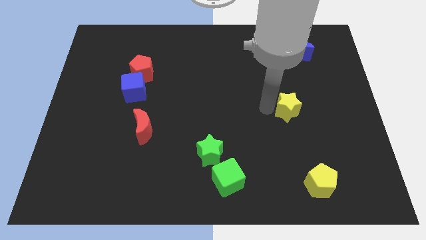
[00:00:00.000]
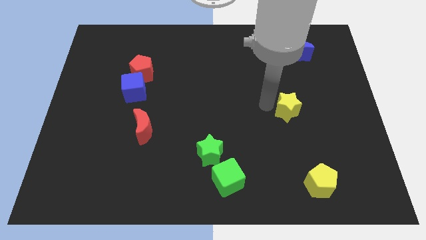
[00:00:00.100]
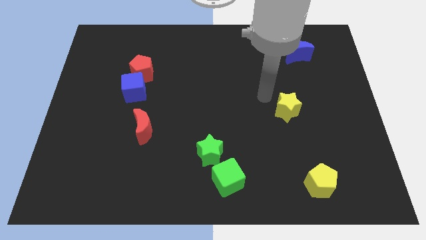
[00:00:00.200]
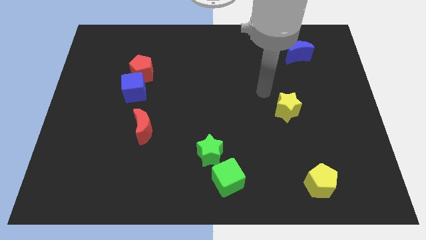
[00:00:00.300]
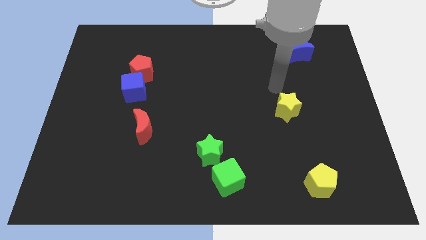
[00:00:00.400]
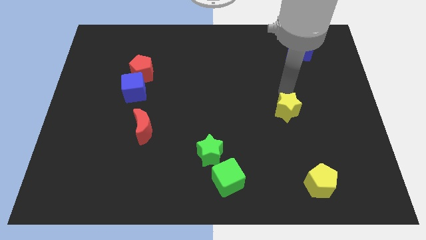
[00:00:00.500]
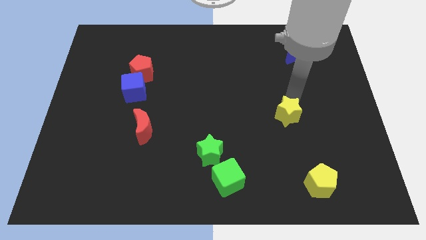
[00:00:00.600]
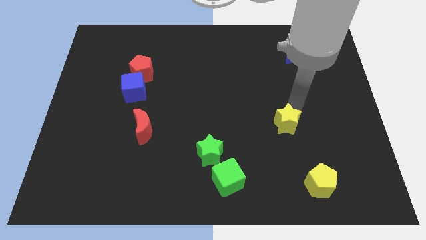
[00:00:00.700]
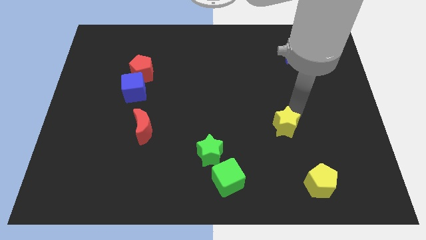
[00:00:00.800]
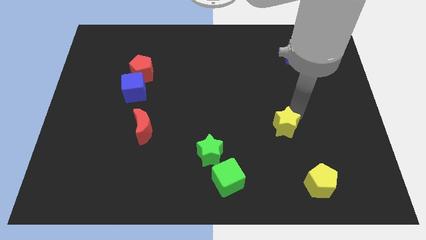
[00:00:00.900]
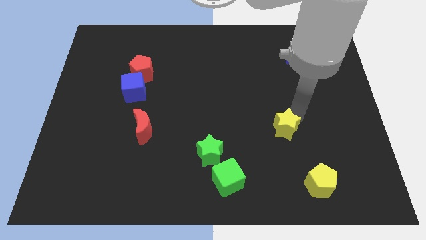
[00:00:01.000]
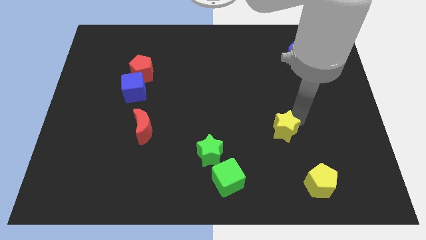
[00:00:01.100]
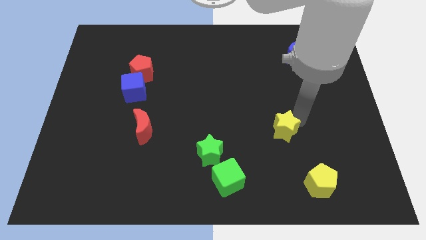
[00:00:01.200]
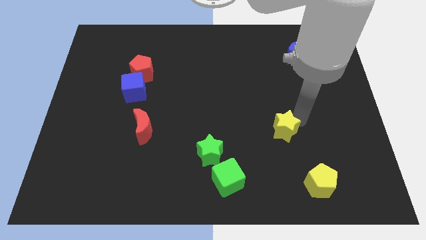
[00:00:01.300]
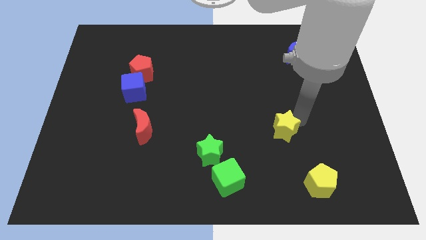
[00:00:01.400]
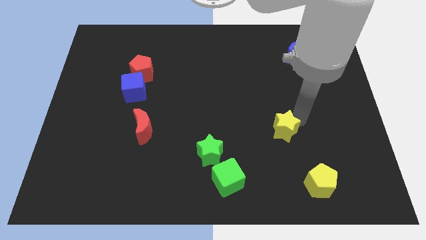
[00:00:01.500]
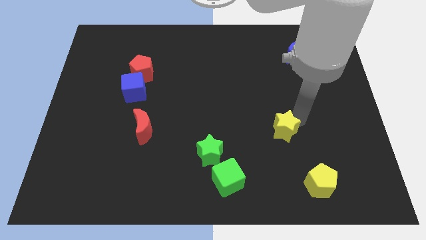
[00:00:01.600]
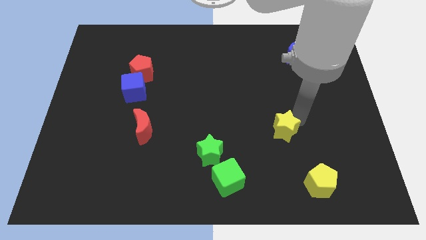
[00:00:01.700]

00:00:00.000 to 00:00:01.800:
move the yellow star towards down

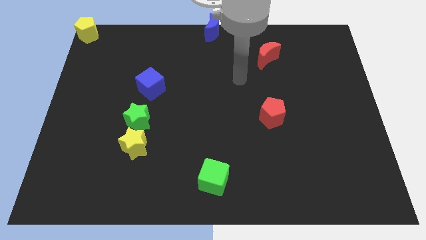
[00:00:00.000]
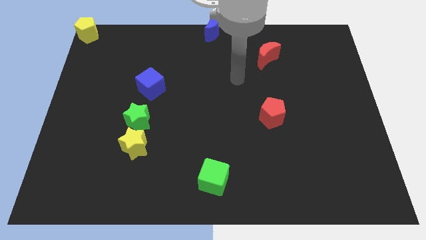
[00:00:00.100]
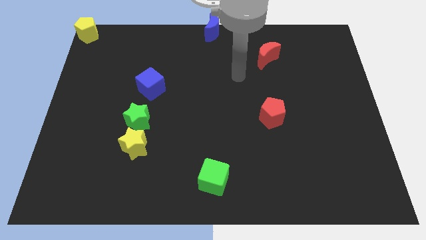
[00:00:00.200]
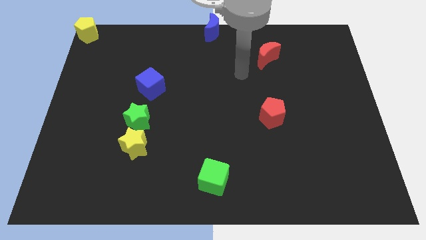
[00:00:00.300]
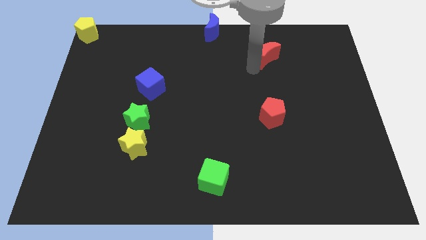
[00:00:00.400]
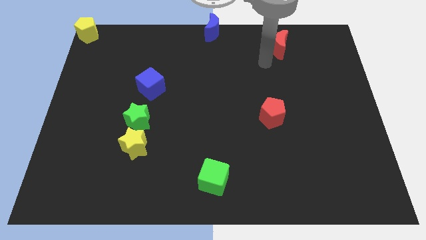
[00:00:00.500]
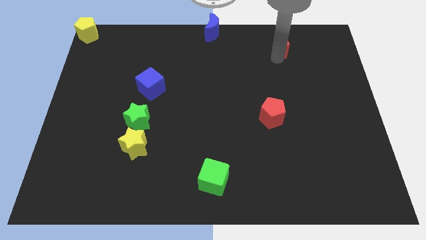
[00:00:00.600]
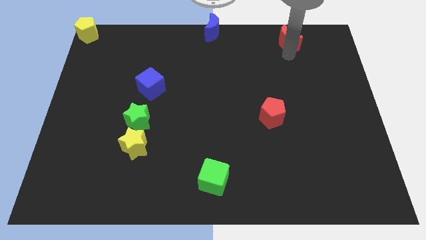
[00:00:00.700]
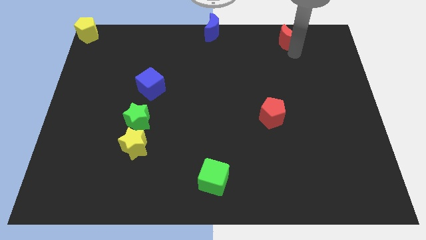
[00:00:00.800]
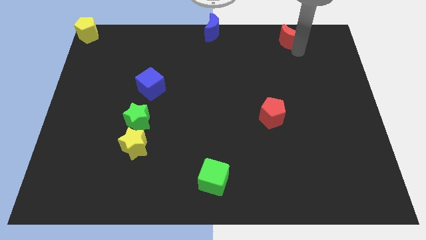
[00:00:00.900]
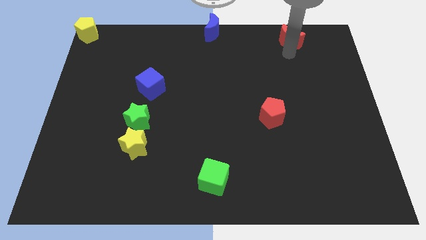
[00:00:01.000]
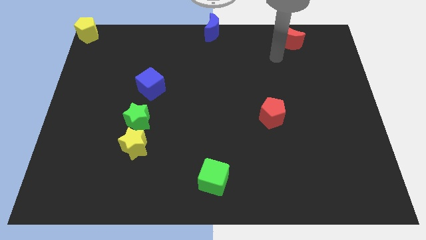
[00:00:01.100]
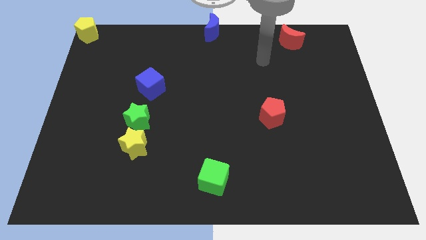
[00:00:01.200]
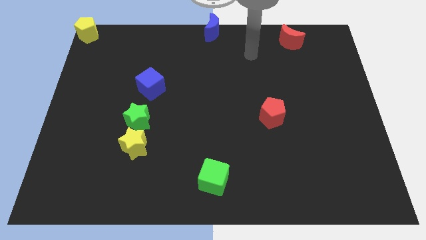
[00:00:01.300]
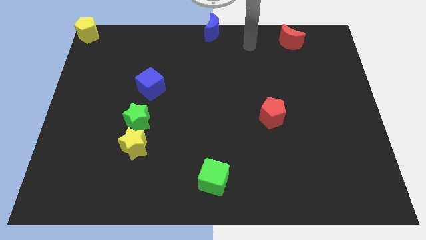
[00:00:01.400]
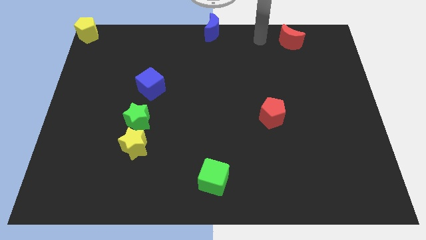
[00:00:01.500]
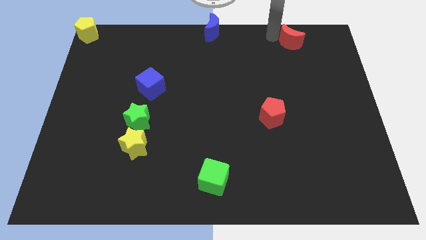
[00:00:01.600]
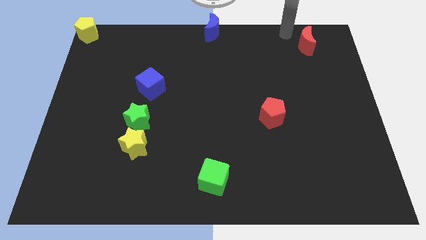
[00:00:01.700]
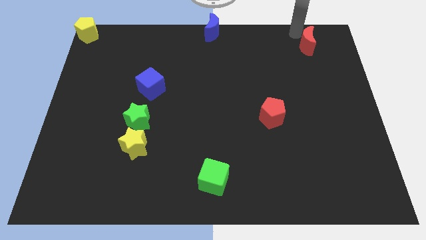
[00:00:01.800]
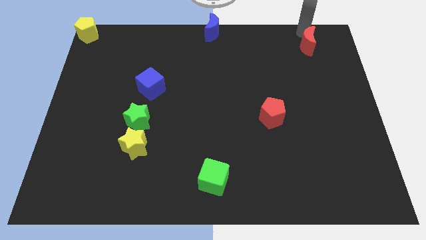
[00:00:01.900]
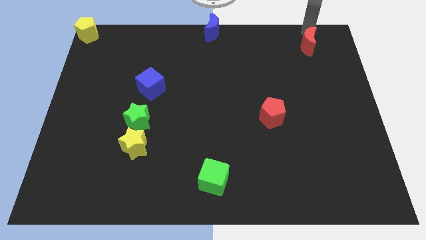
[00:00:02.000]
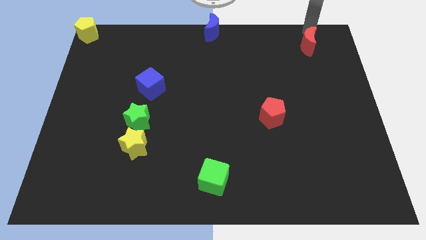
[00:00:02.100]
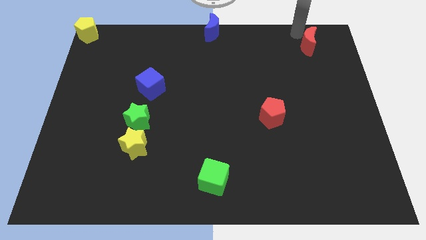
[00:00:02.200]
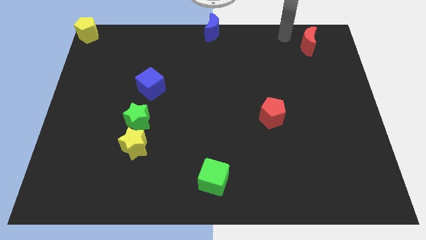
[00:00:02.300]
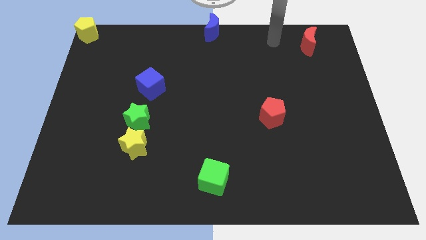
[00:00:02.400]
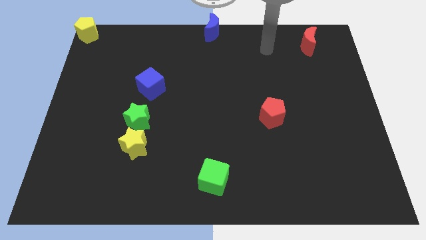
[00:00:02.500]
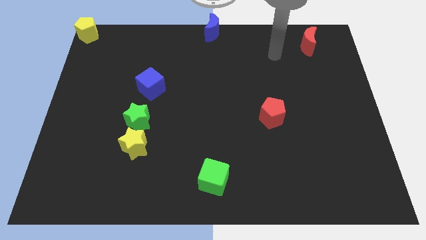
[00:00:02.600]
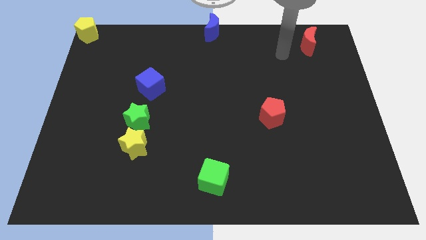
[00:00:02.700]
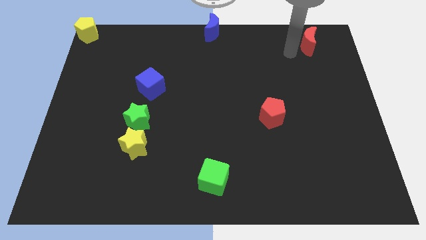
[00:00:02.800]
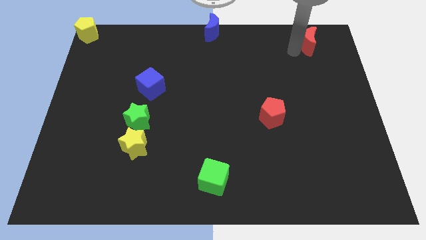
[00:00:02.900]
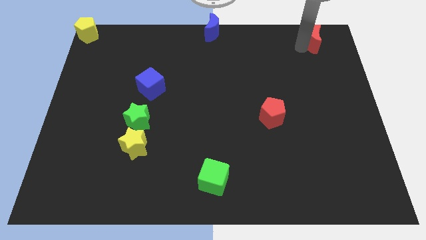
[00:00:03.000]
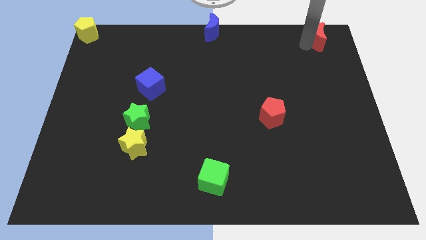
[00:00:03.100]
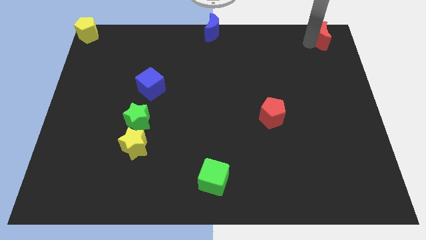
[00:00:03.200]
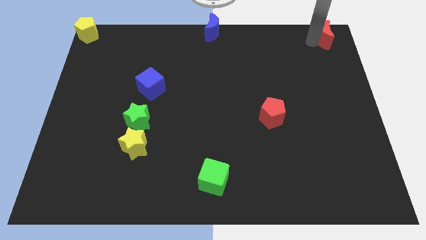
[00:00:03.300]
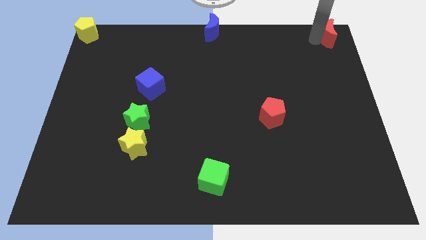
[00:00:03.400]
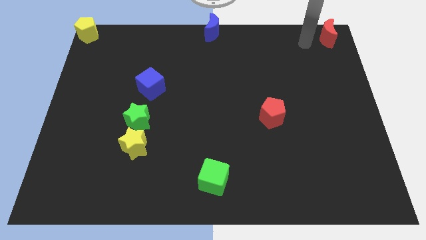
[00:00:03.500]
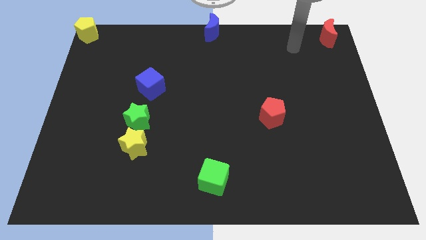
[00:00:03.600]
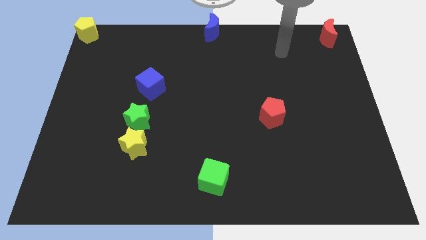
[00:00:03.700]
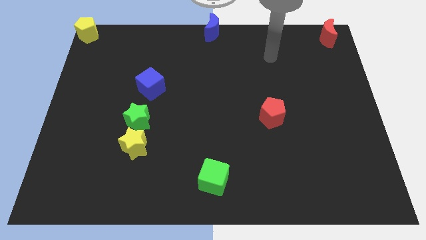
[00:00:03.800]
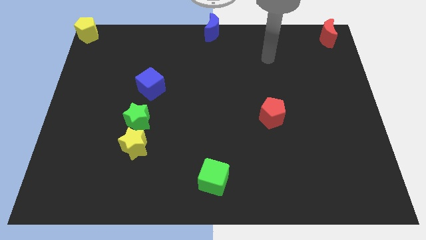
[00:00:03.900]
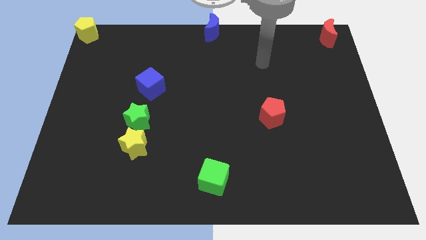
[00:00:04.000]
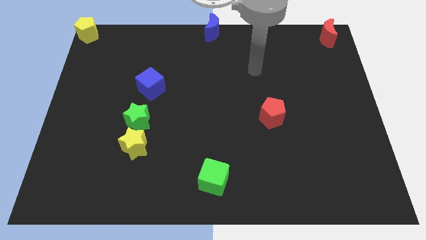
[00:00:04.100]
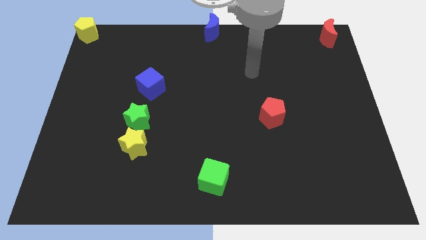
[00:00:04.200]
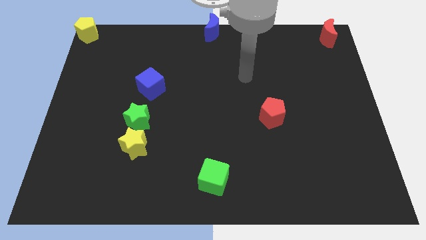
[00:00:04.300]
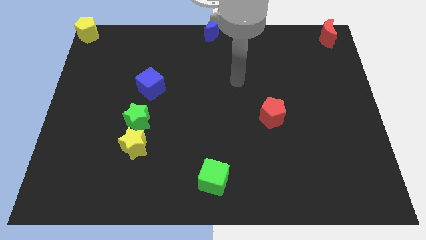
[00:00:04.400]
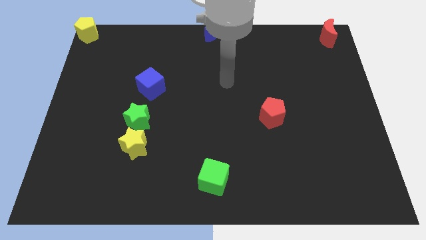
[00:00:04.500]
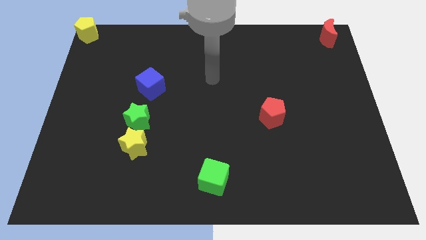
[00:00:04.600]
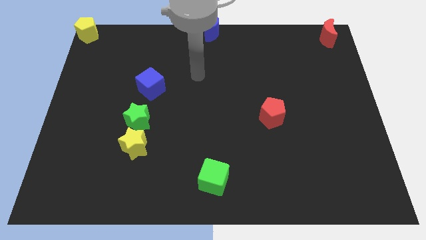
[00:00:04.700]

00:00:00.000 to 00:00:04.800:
push the red crescent to the top right corner of the board

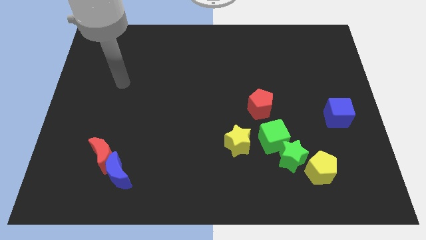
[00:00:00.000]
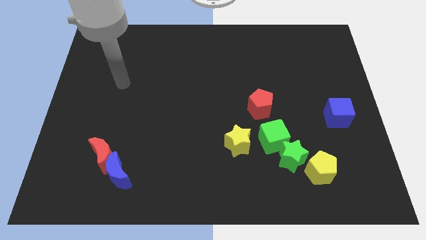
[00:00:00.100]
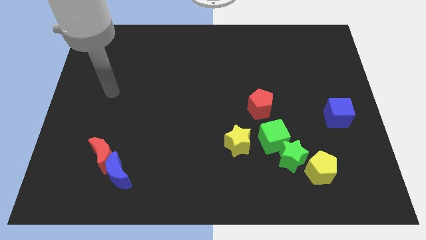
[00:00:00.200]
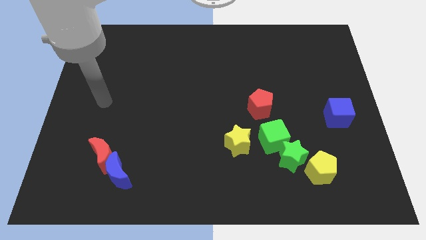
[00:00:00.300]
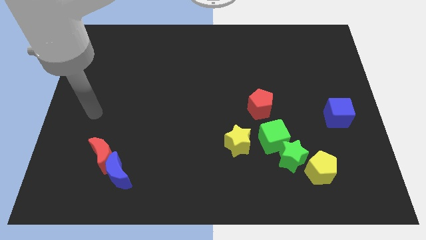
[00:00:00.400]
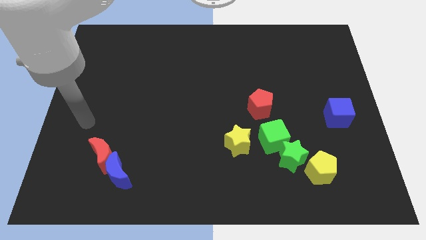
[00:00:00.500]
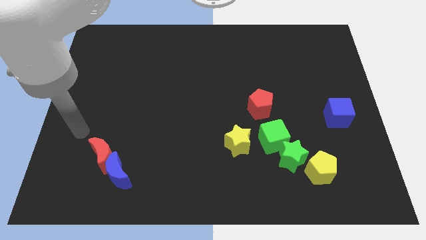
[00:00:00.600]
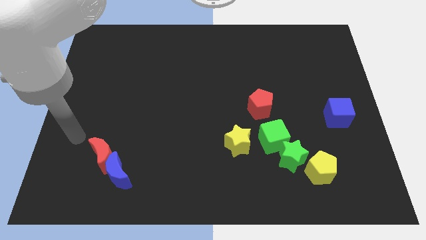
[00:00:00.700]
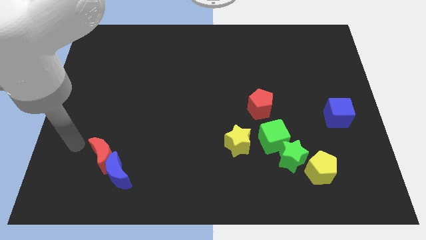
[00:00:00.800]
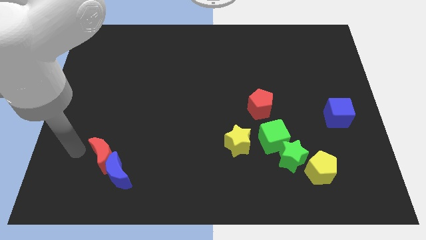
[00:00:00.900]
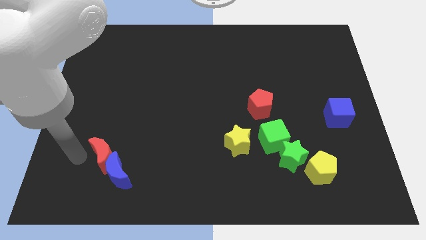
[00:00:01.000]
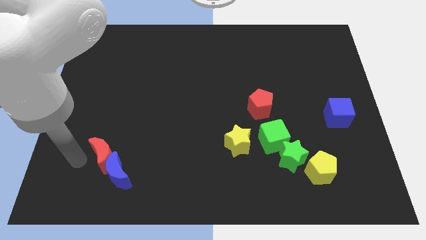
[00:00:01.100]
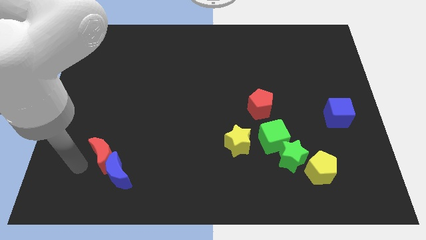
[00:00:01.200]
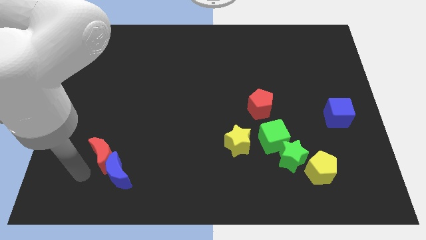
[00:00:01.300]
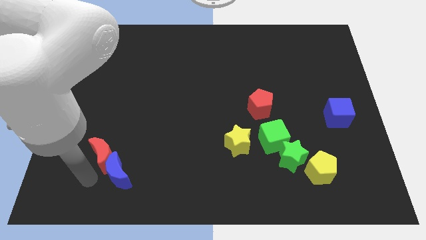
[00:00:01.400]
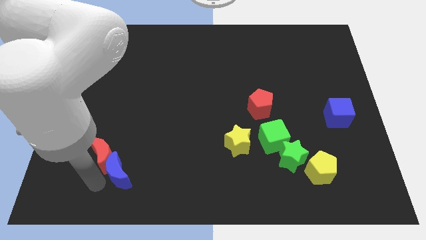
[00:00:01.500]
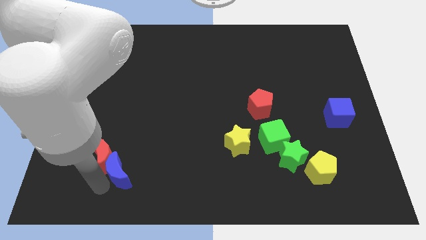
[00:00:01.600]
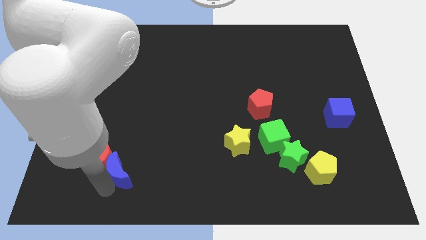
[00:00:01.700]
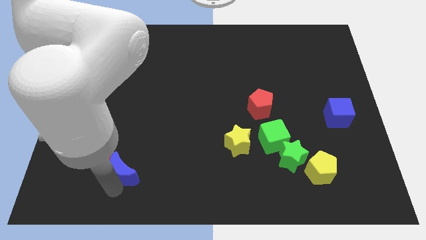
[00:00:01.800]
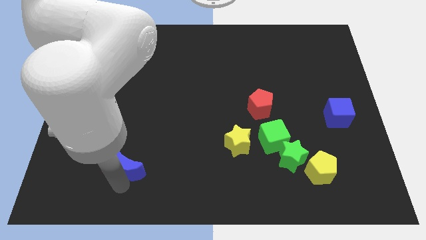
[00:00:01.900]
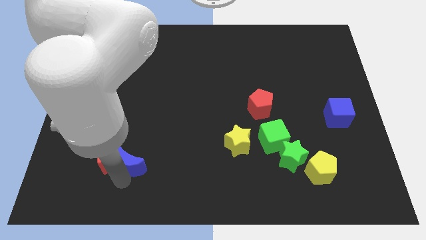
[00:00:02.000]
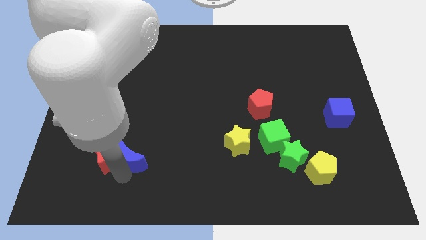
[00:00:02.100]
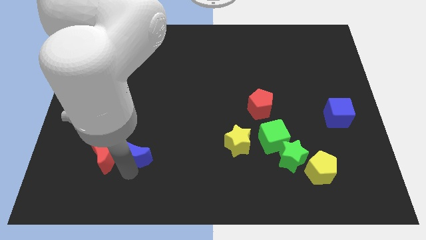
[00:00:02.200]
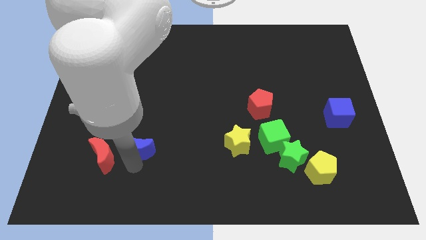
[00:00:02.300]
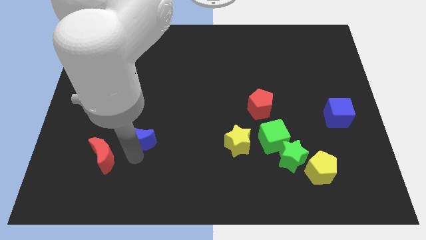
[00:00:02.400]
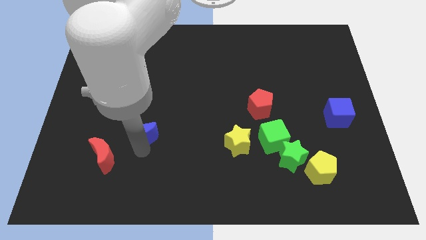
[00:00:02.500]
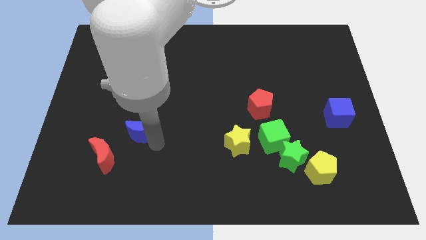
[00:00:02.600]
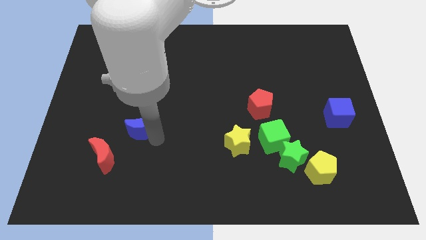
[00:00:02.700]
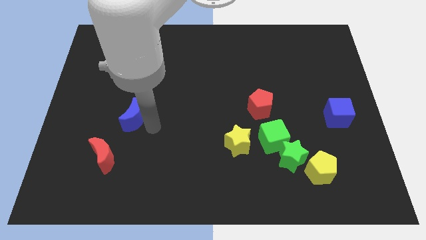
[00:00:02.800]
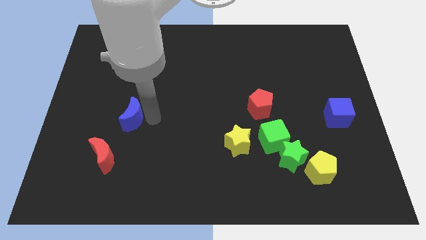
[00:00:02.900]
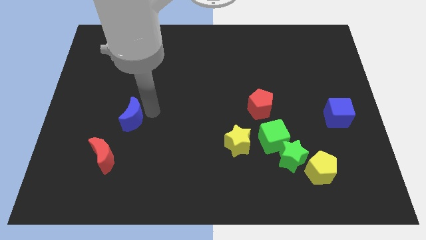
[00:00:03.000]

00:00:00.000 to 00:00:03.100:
move the blue moon diagonal to red moon
